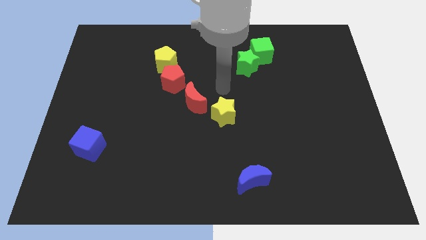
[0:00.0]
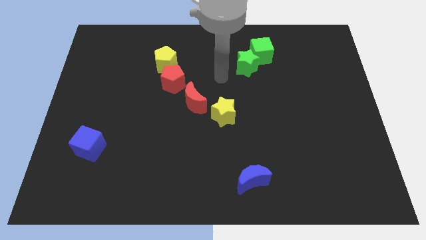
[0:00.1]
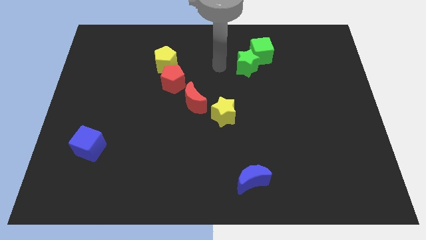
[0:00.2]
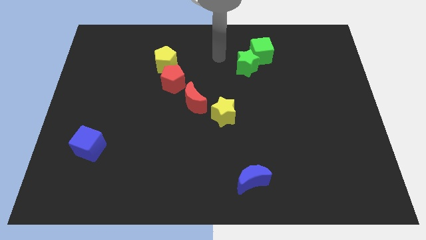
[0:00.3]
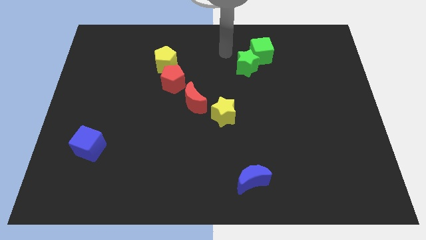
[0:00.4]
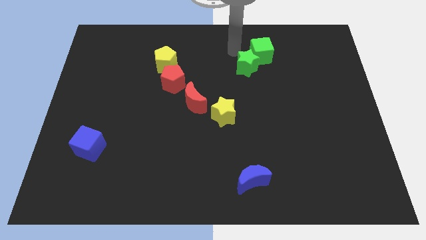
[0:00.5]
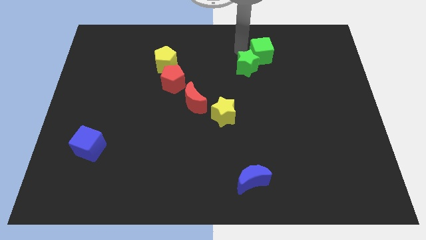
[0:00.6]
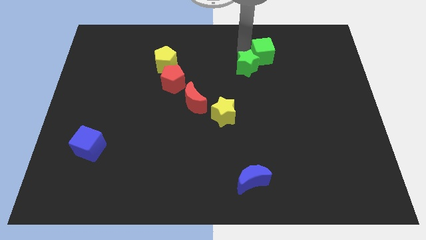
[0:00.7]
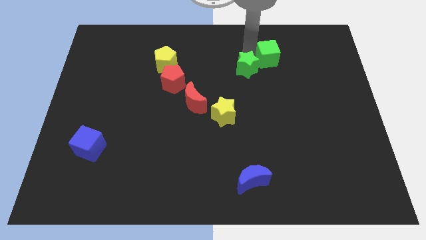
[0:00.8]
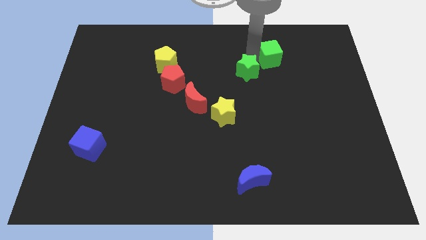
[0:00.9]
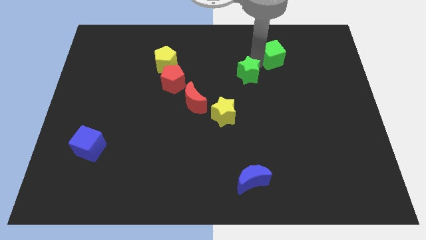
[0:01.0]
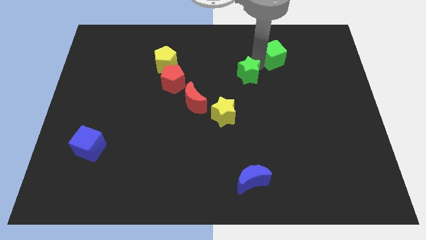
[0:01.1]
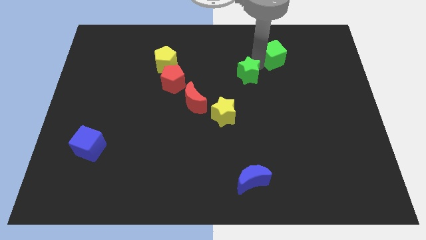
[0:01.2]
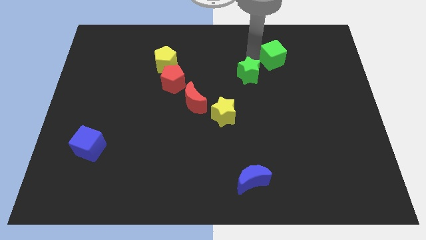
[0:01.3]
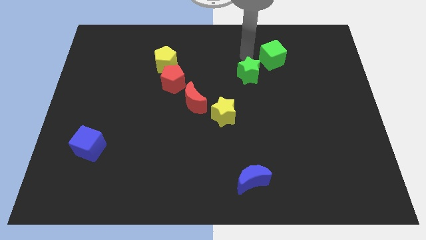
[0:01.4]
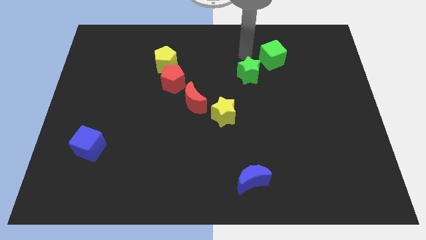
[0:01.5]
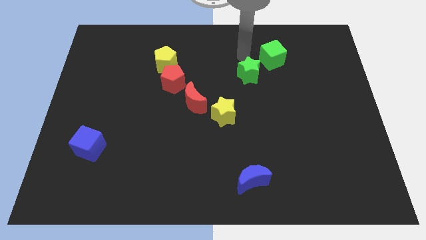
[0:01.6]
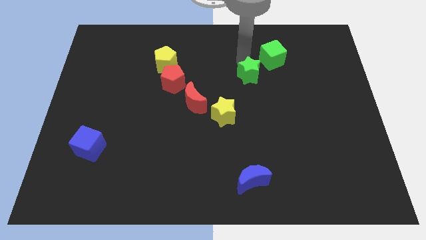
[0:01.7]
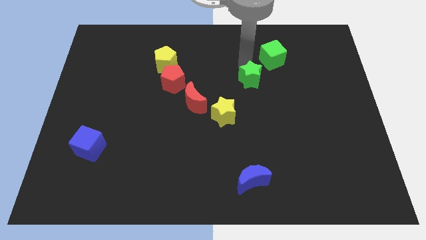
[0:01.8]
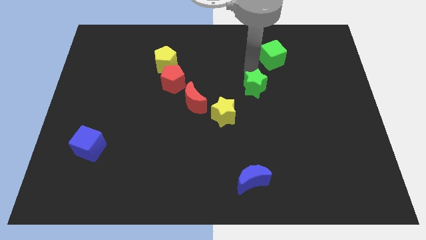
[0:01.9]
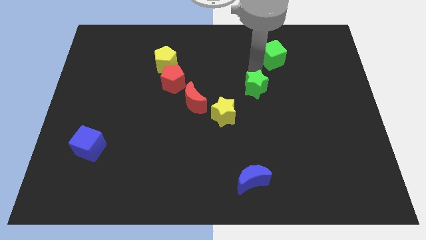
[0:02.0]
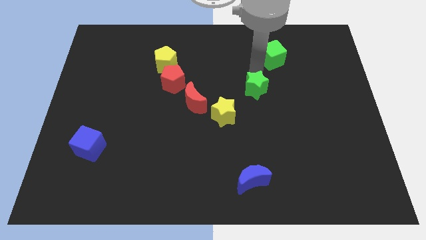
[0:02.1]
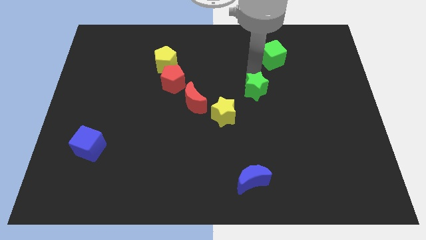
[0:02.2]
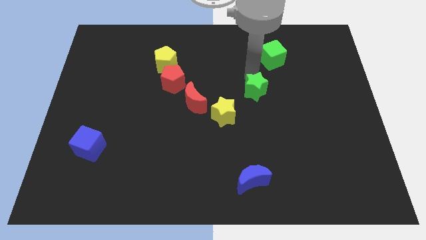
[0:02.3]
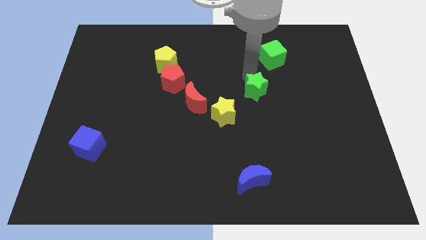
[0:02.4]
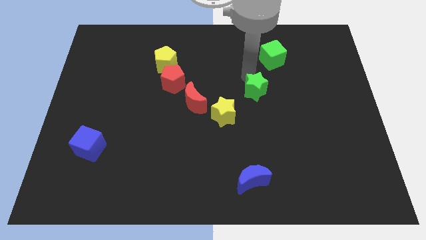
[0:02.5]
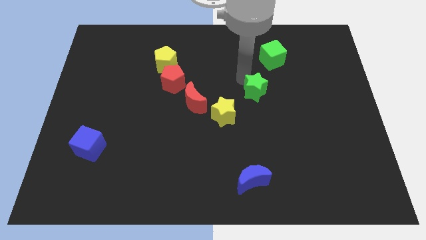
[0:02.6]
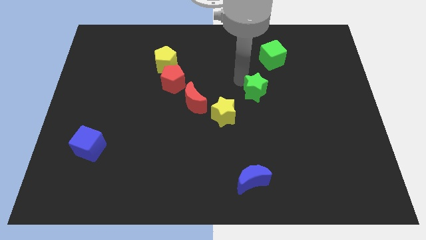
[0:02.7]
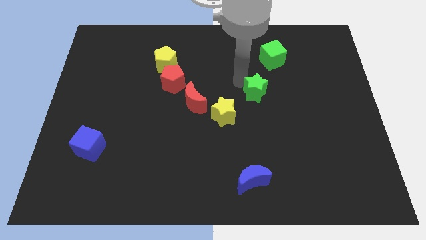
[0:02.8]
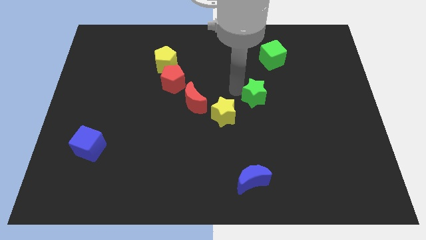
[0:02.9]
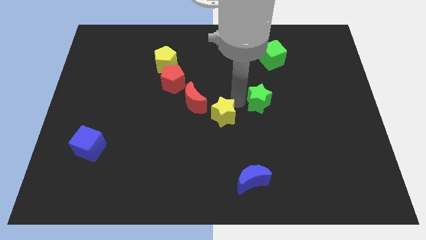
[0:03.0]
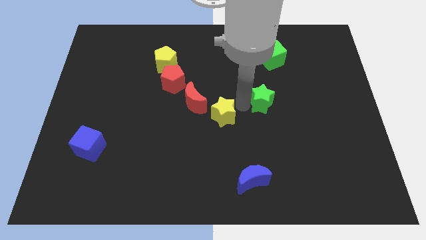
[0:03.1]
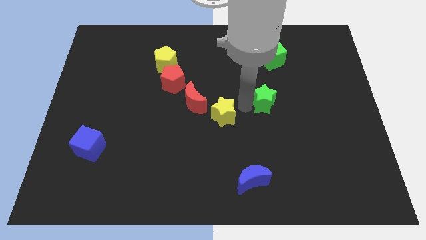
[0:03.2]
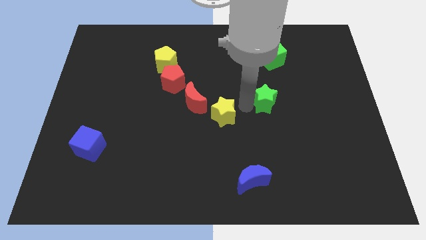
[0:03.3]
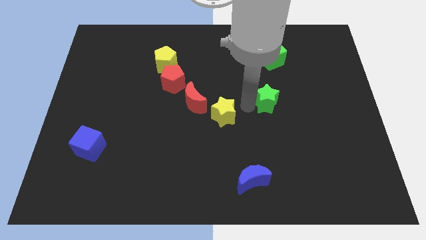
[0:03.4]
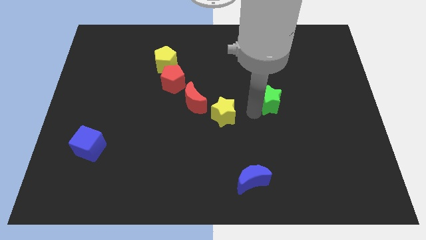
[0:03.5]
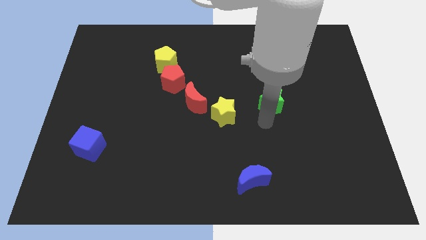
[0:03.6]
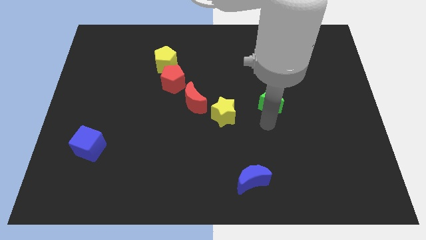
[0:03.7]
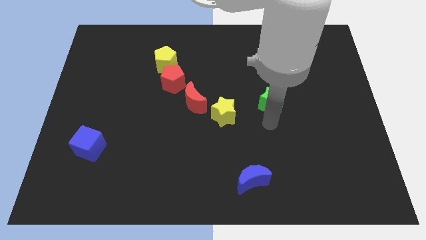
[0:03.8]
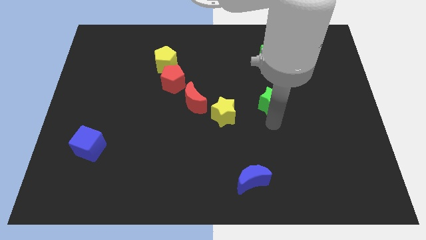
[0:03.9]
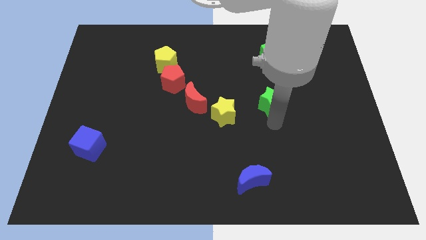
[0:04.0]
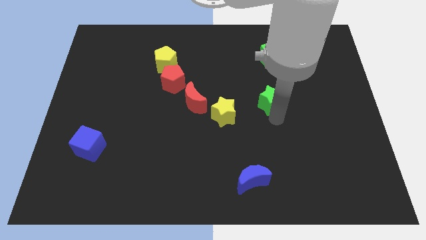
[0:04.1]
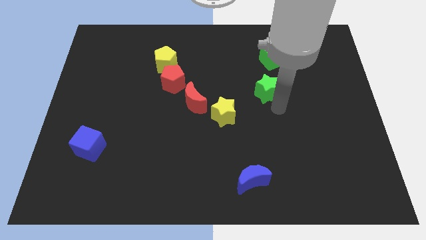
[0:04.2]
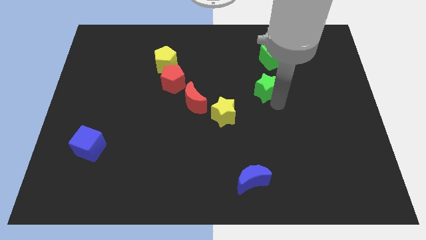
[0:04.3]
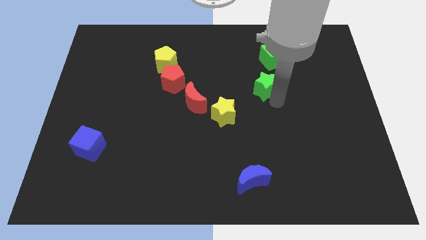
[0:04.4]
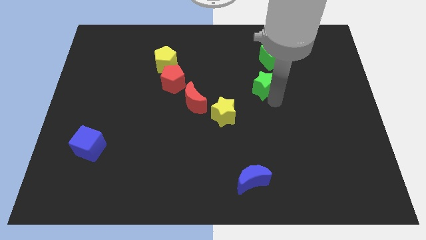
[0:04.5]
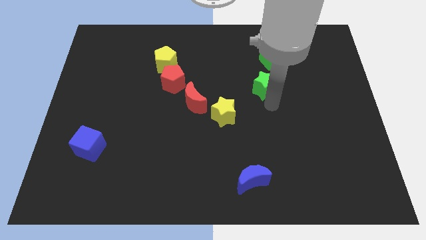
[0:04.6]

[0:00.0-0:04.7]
move green star diagonally below the green cube

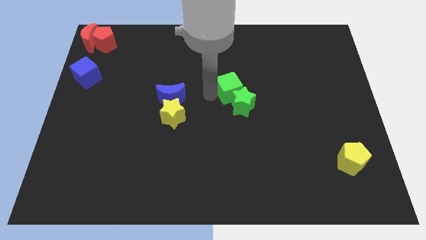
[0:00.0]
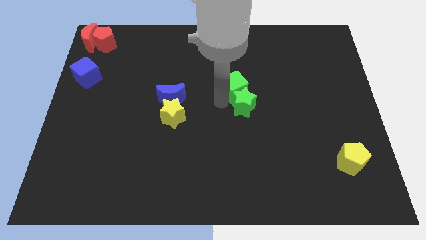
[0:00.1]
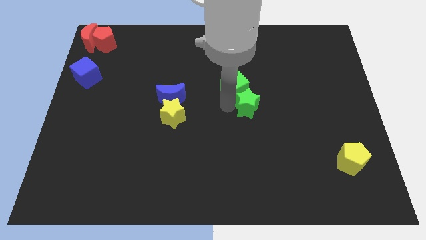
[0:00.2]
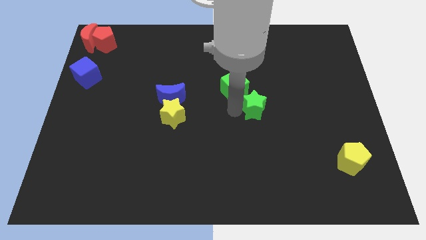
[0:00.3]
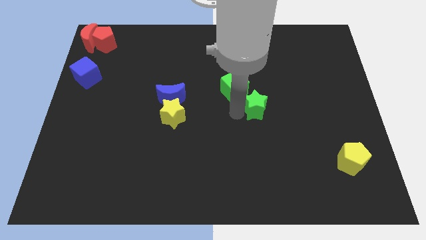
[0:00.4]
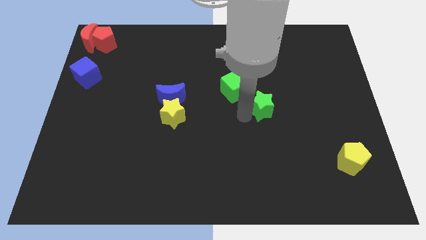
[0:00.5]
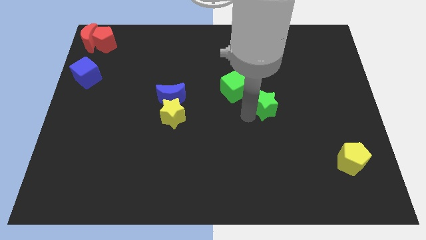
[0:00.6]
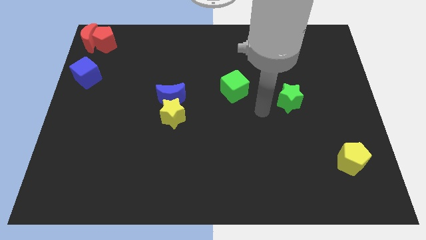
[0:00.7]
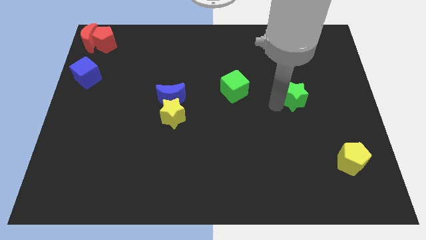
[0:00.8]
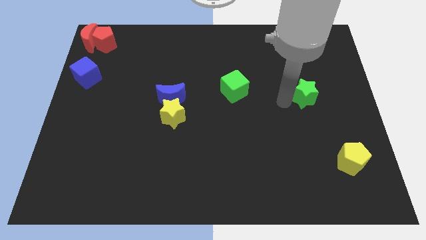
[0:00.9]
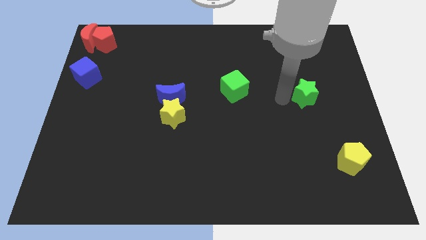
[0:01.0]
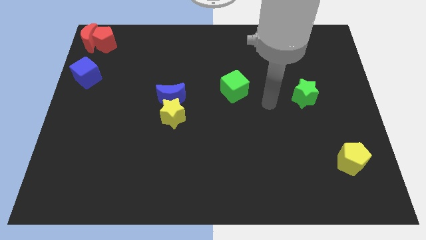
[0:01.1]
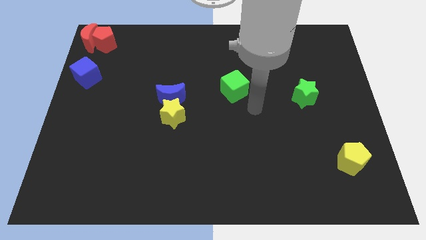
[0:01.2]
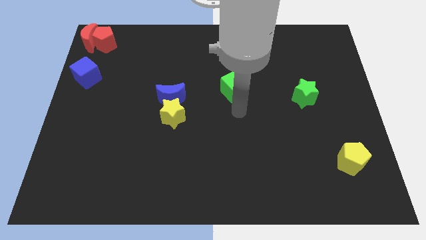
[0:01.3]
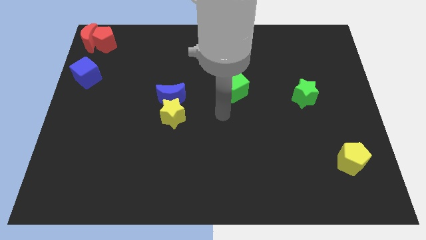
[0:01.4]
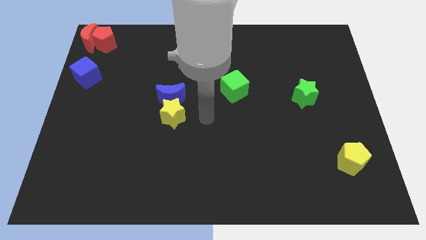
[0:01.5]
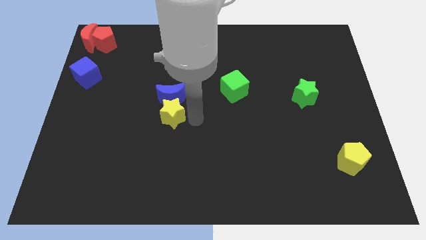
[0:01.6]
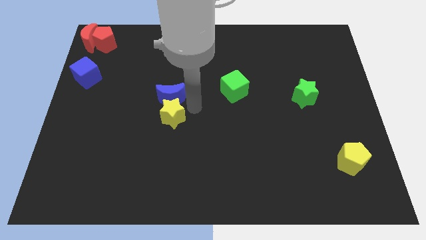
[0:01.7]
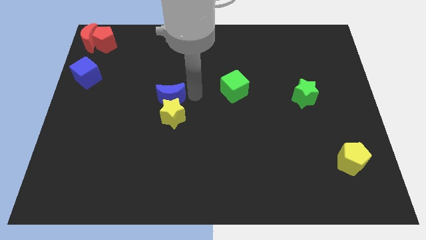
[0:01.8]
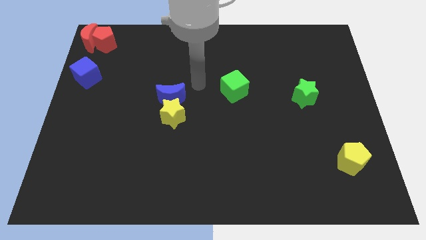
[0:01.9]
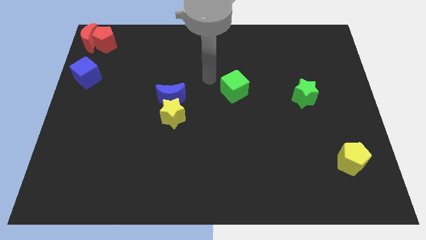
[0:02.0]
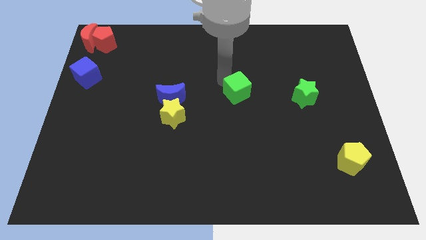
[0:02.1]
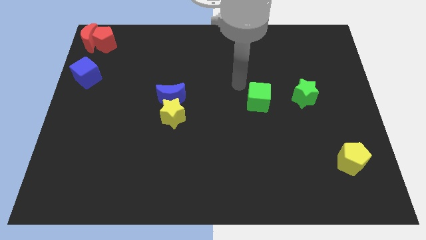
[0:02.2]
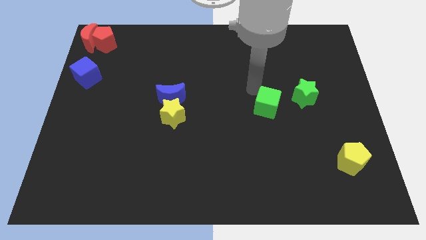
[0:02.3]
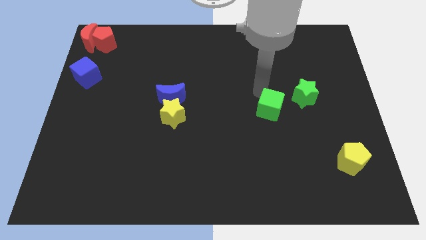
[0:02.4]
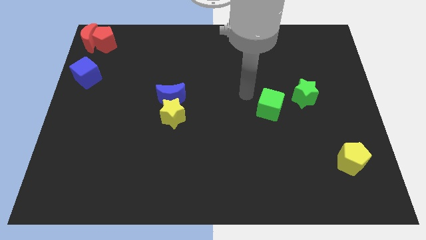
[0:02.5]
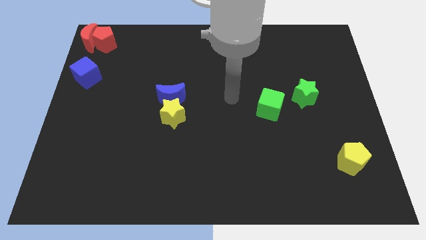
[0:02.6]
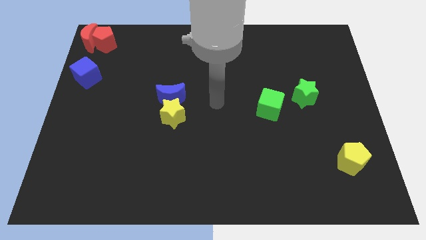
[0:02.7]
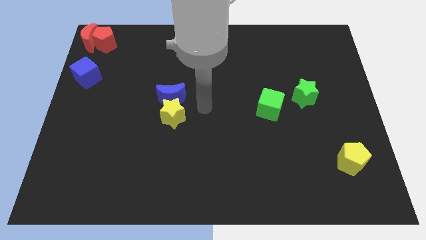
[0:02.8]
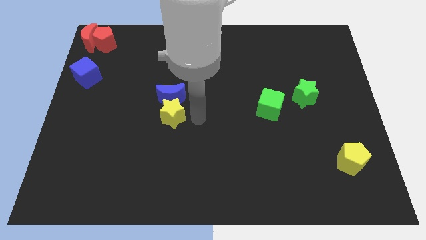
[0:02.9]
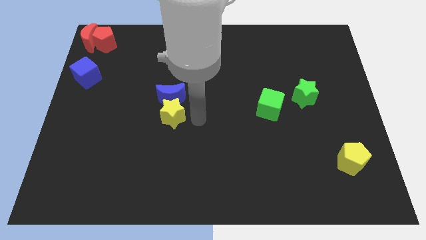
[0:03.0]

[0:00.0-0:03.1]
push the green cube to the bottom left side of the green star

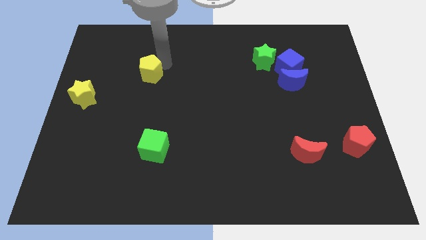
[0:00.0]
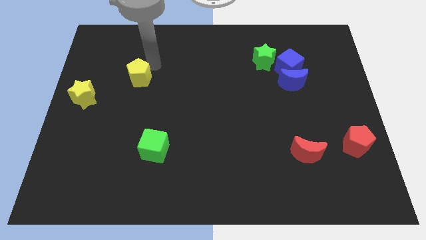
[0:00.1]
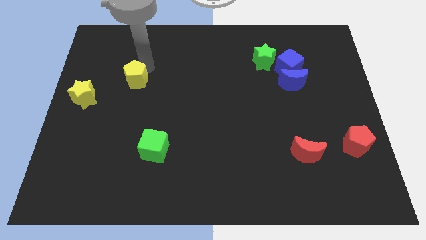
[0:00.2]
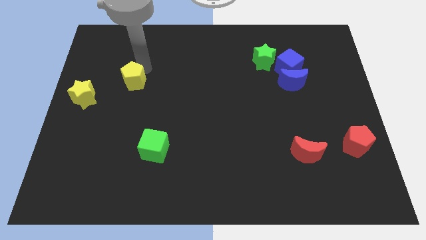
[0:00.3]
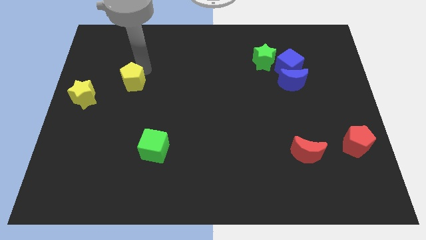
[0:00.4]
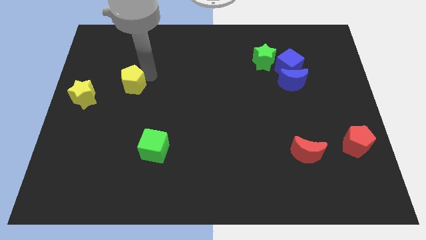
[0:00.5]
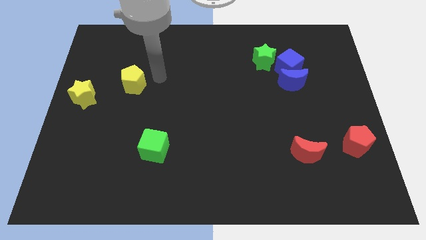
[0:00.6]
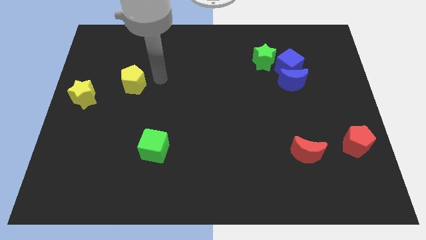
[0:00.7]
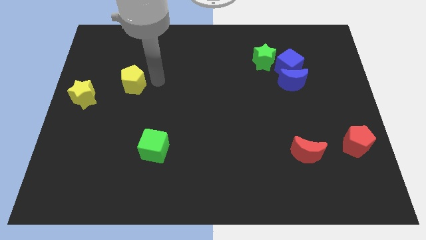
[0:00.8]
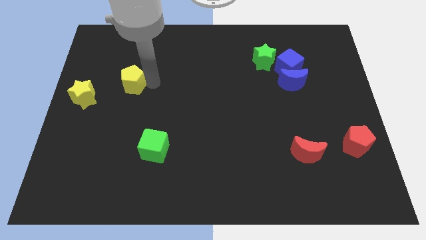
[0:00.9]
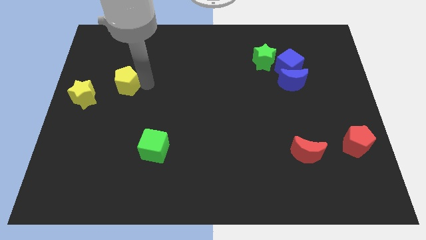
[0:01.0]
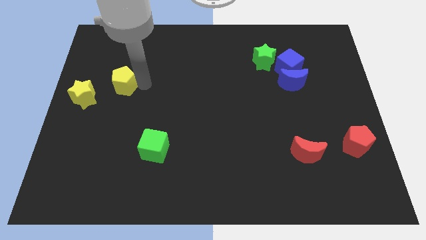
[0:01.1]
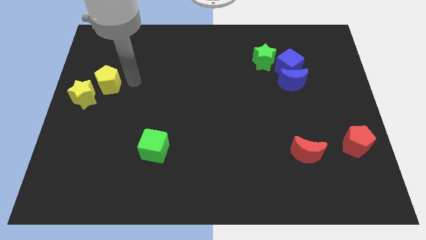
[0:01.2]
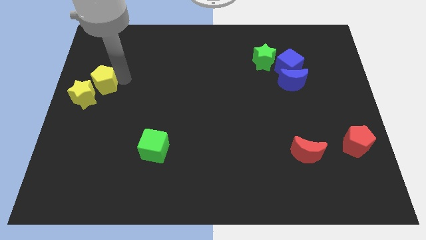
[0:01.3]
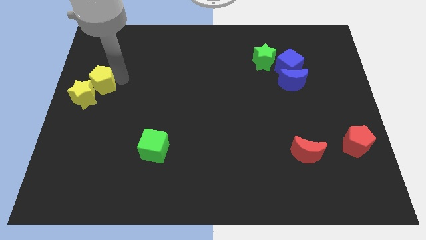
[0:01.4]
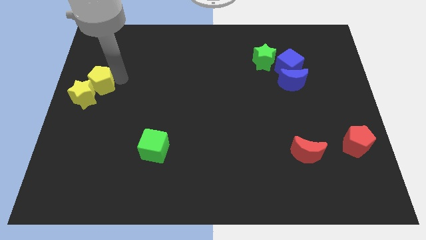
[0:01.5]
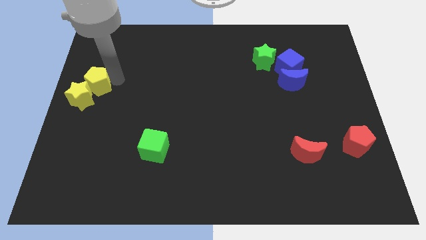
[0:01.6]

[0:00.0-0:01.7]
push the yellow pentagon into the yellow star
